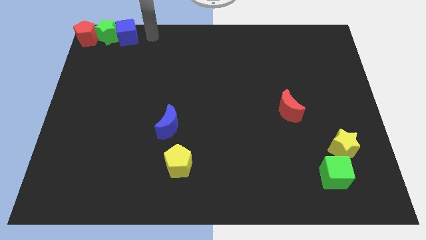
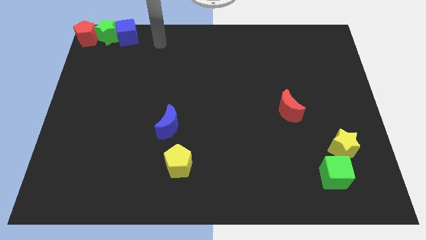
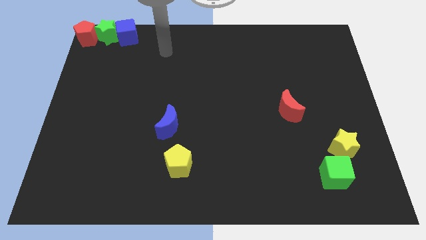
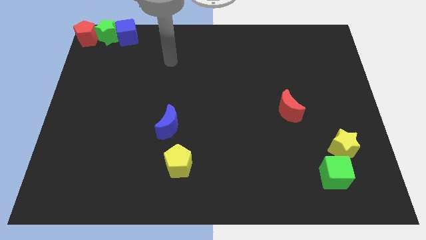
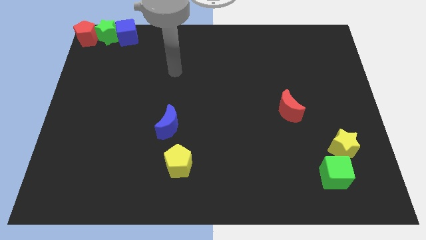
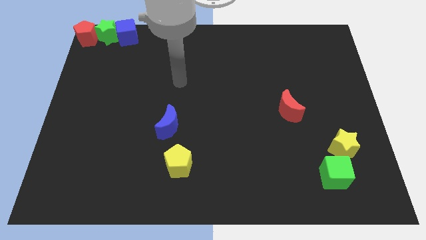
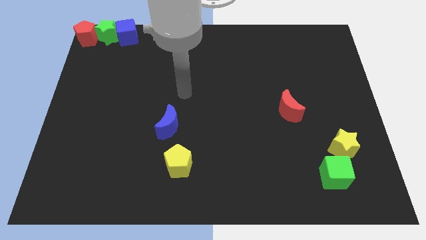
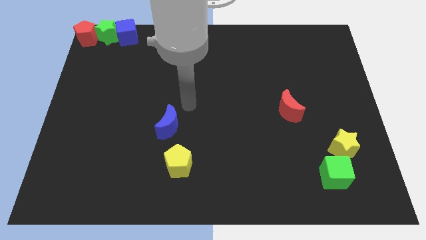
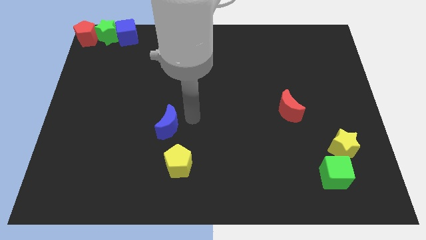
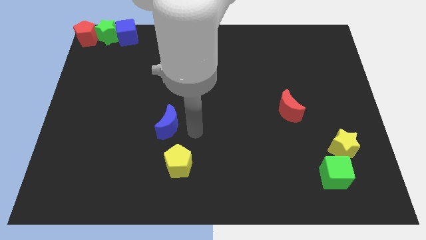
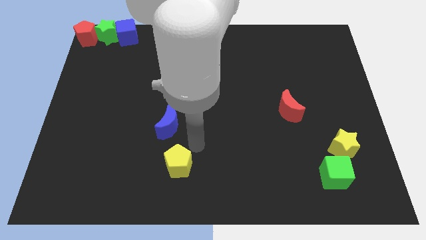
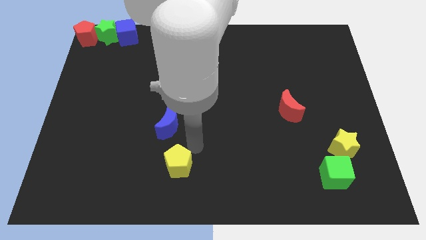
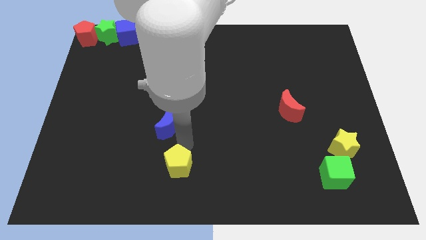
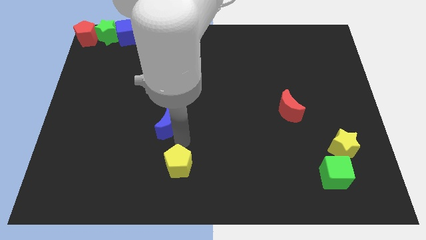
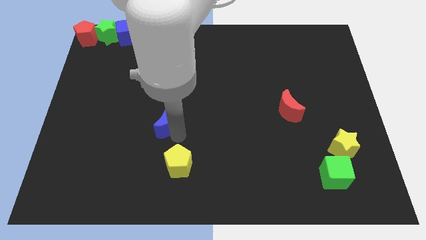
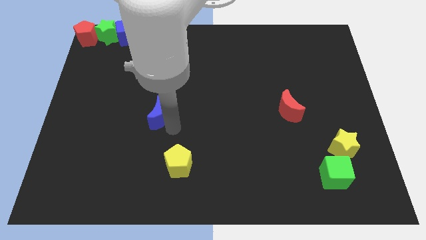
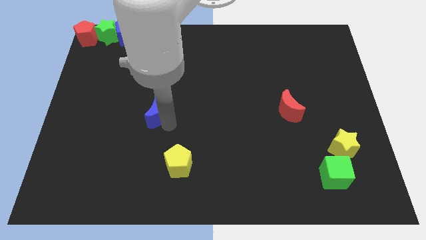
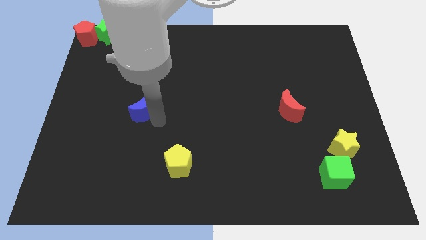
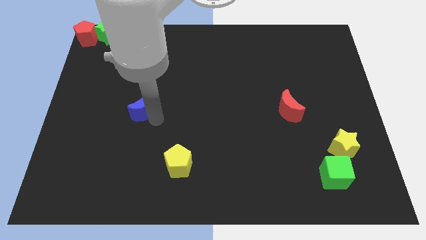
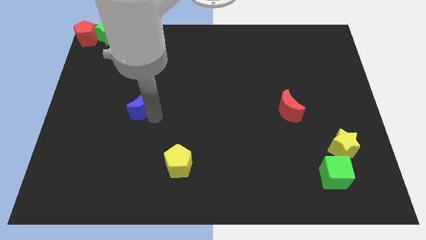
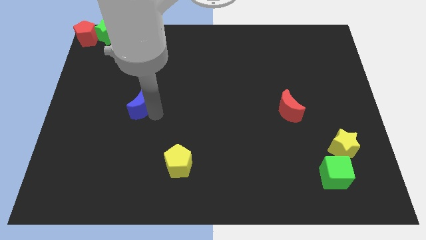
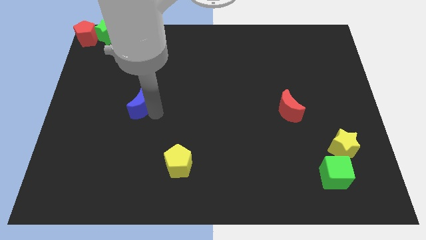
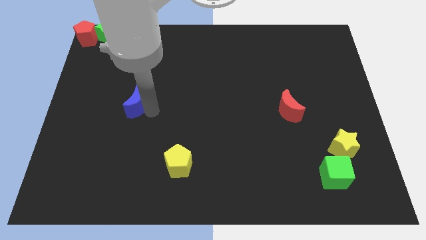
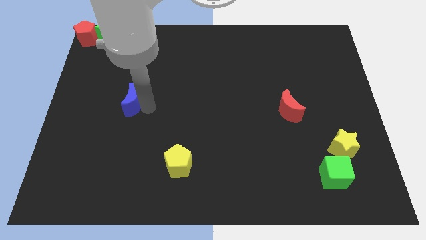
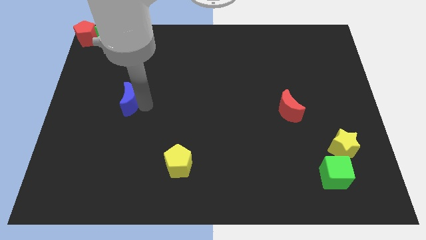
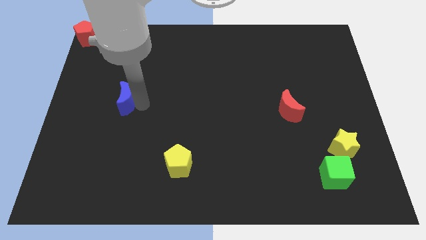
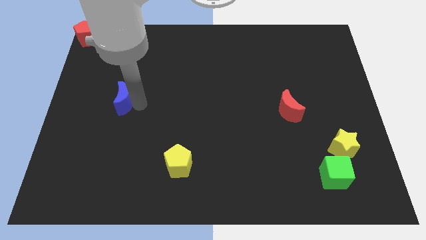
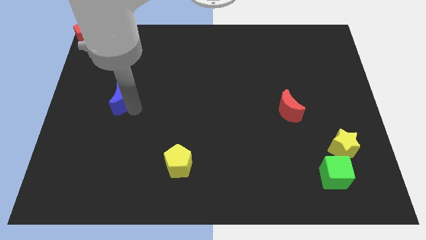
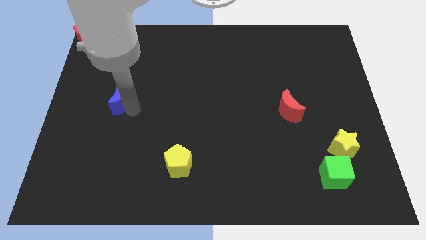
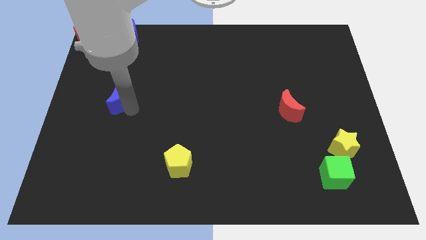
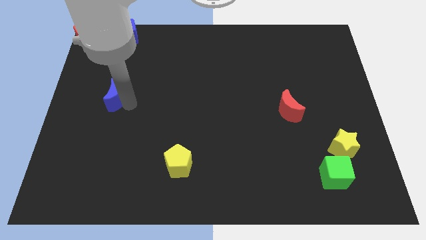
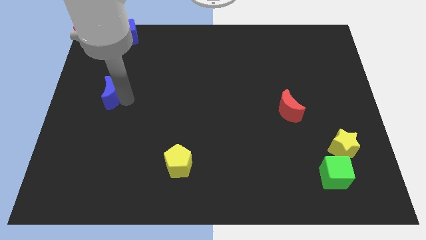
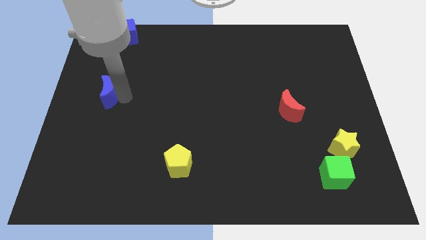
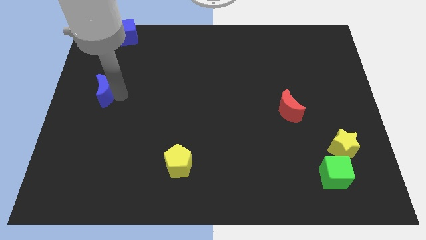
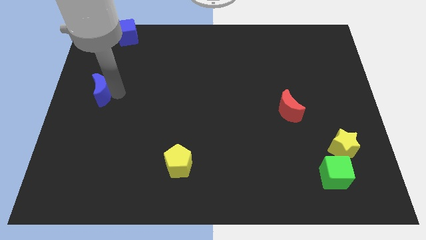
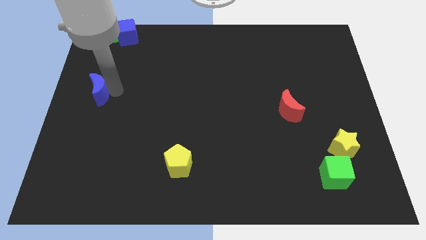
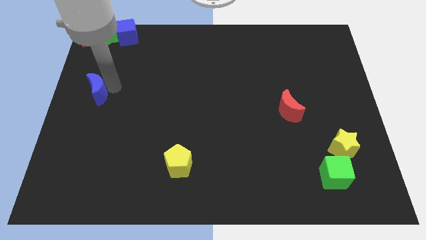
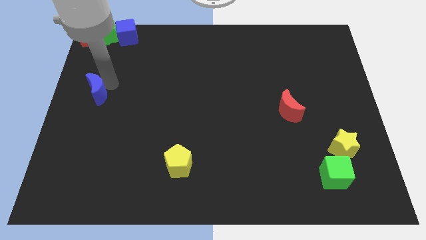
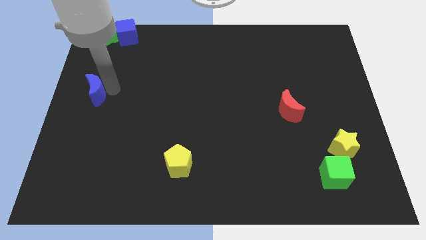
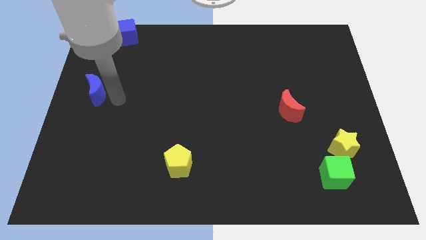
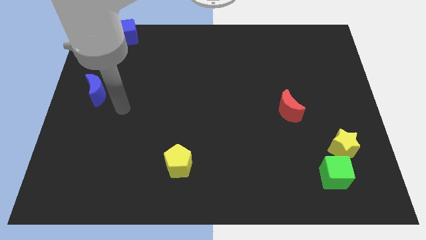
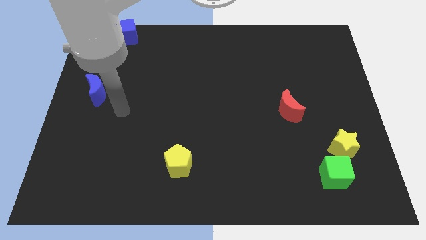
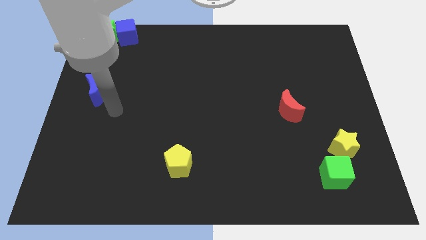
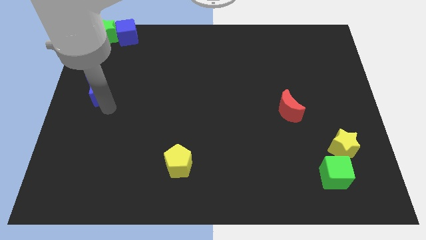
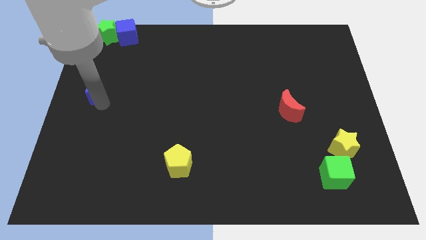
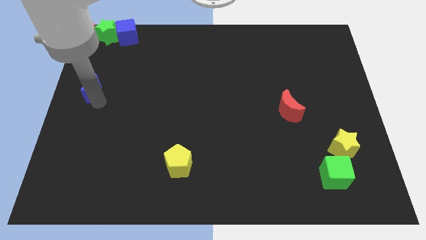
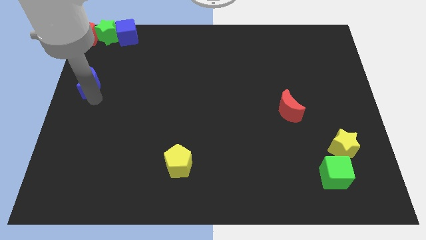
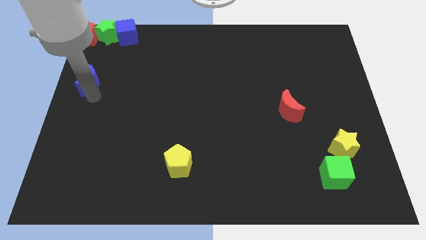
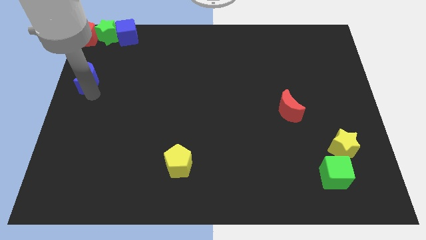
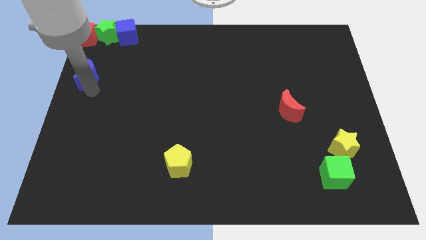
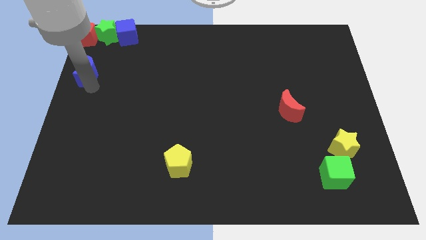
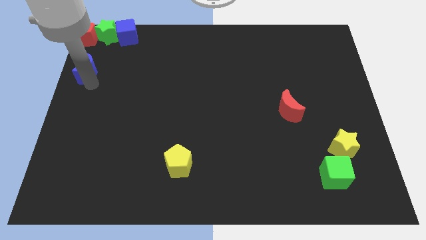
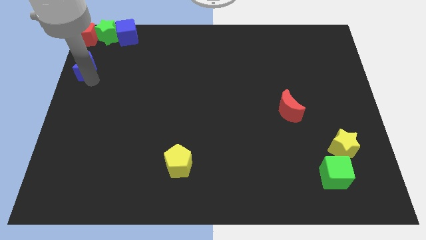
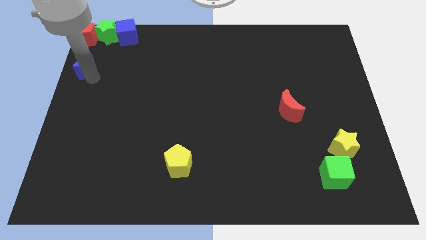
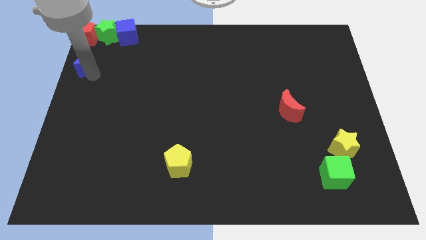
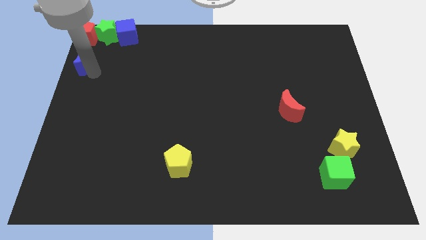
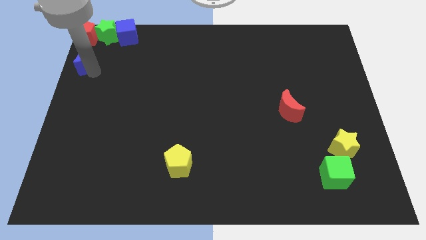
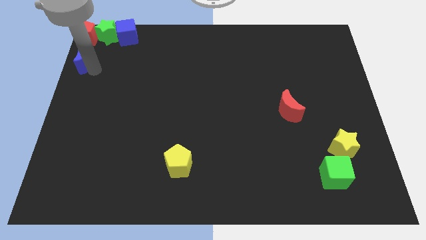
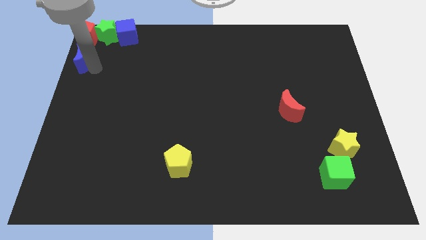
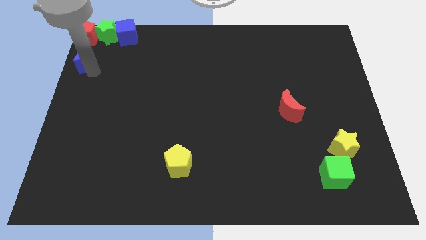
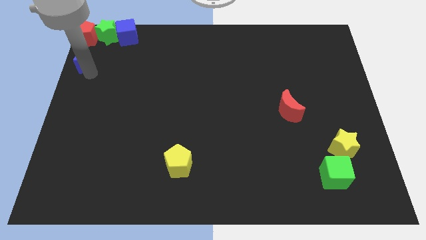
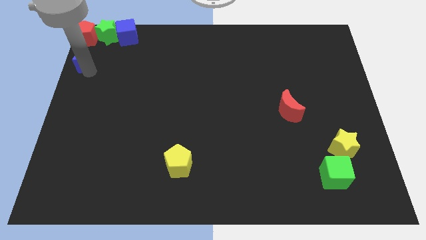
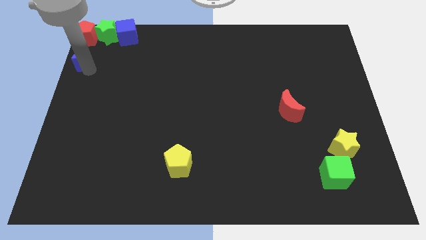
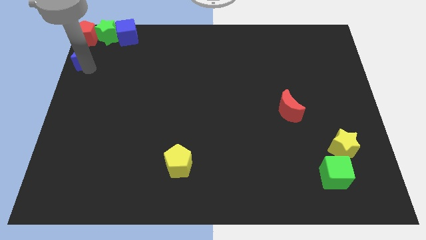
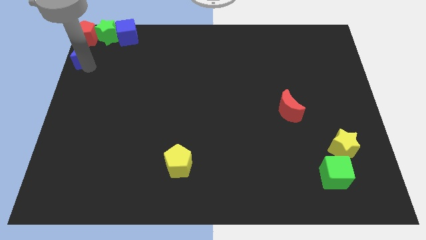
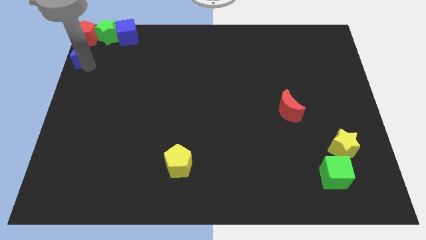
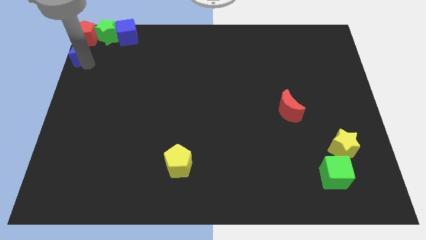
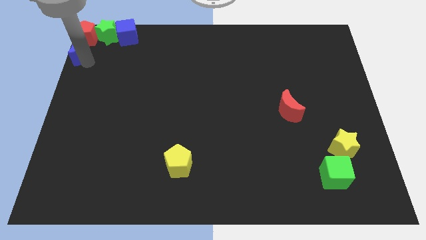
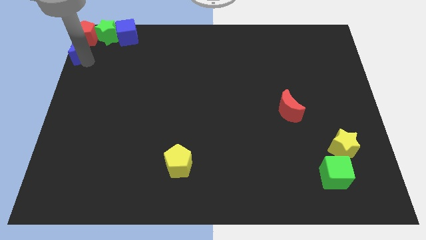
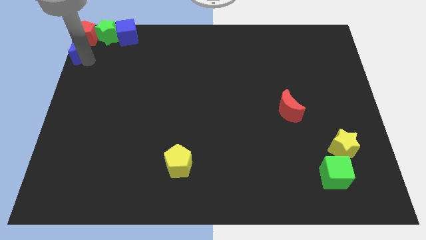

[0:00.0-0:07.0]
move the blue crescent vertically below the bottom side of the red pentagon

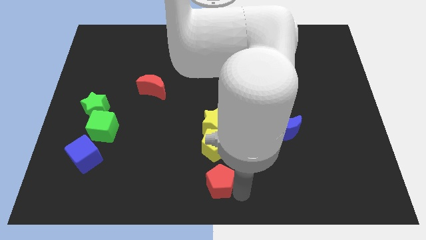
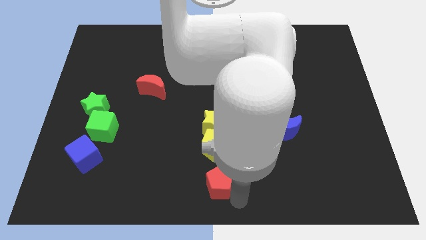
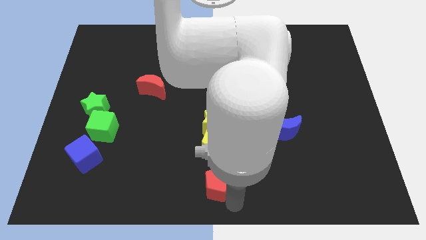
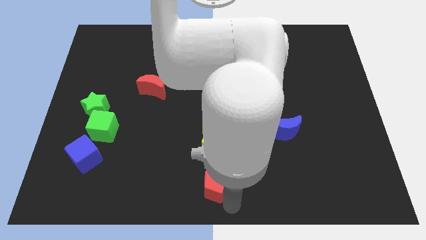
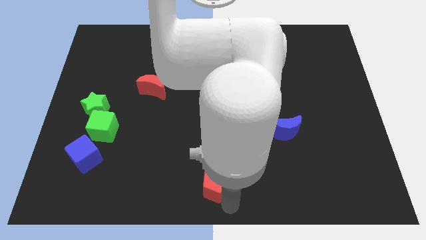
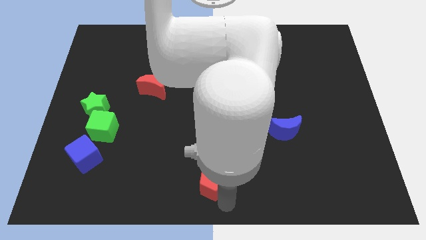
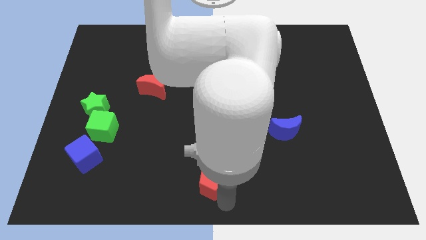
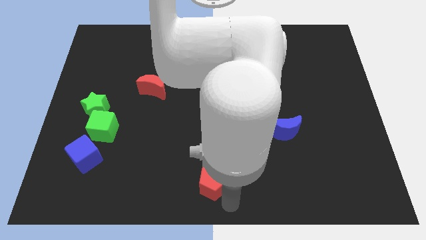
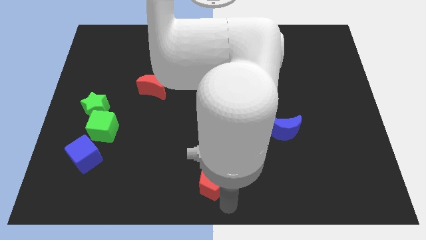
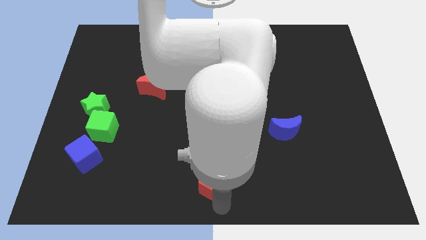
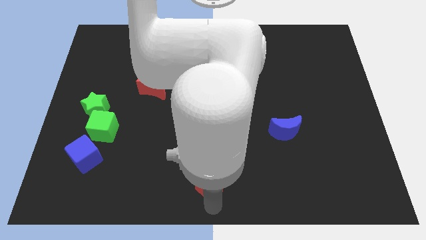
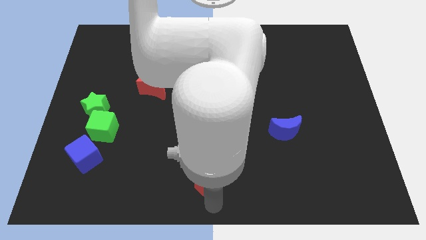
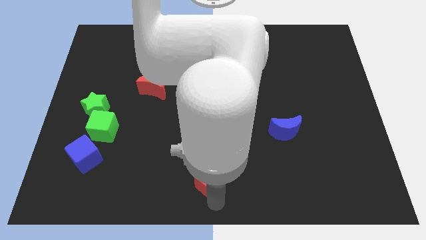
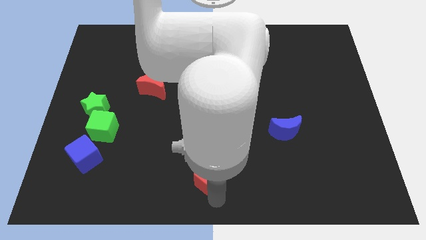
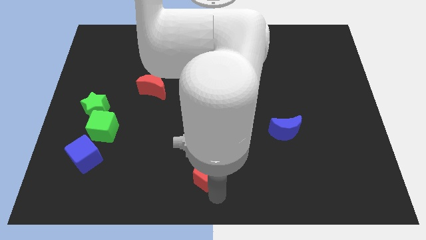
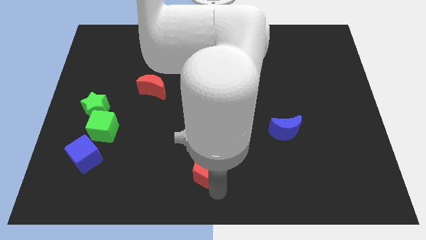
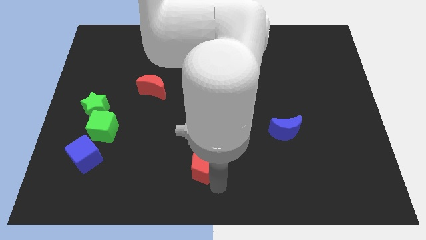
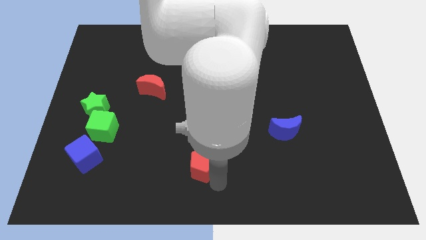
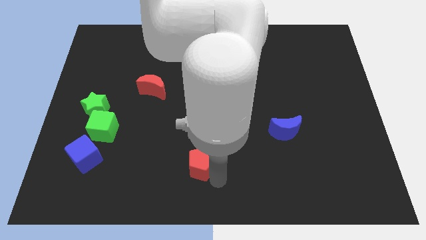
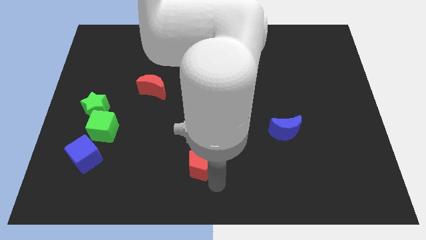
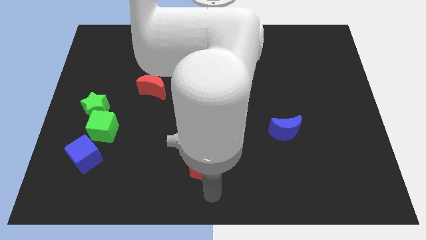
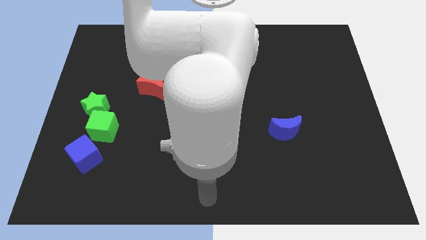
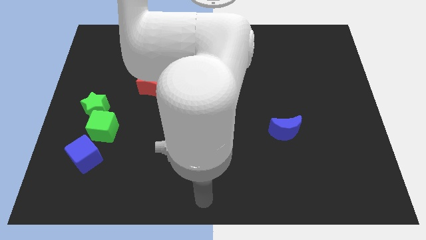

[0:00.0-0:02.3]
point your arm at the bottom center of the board
